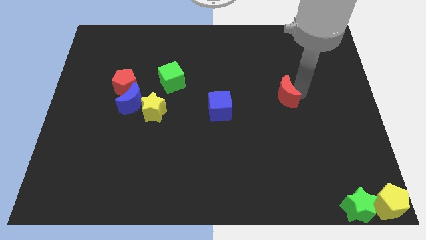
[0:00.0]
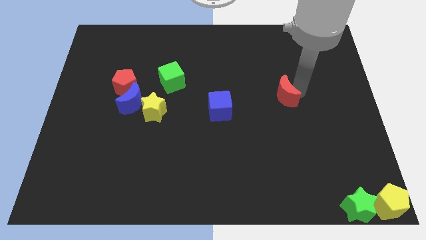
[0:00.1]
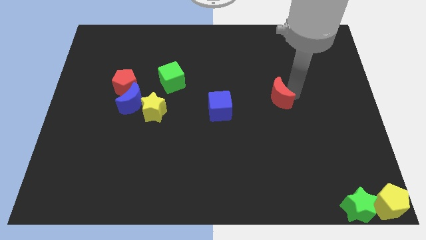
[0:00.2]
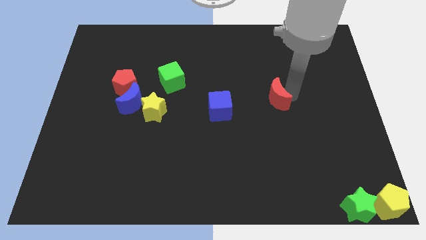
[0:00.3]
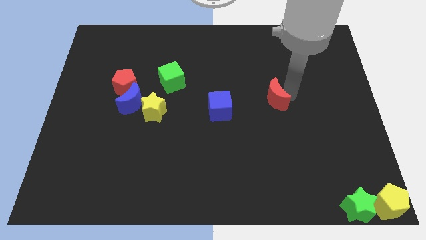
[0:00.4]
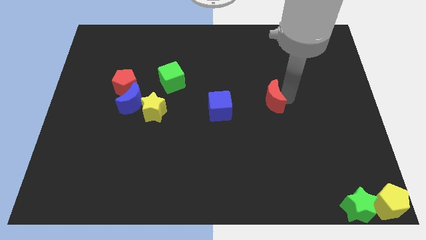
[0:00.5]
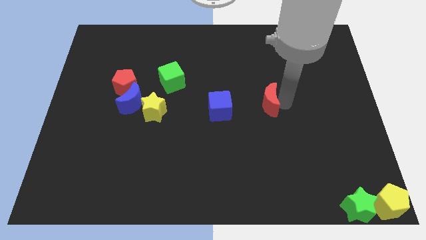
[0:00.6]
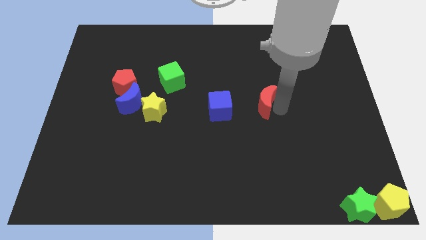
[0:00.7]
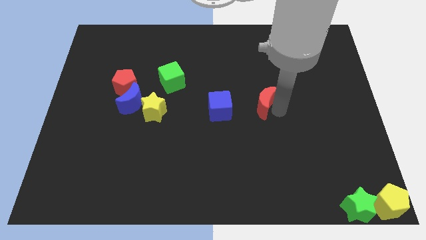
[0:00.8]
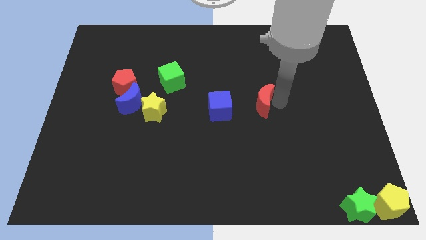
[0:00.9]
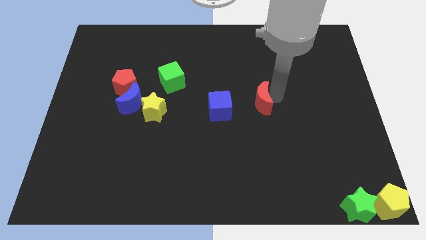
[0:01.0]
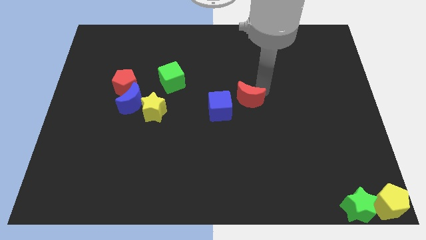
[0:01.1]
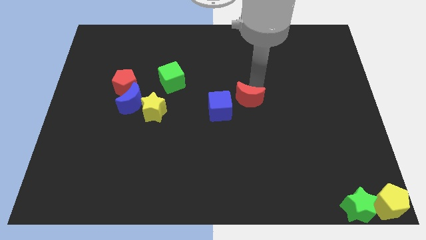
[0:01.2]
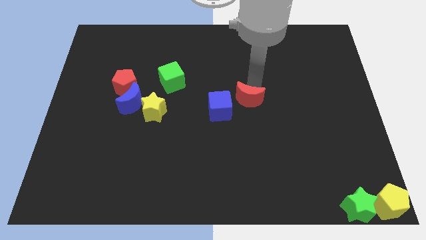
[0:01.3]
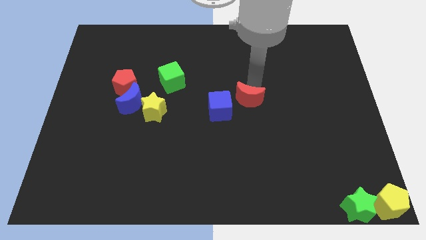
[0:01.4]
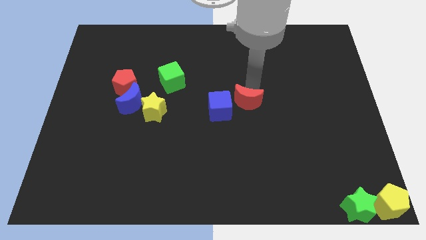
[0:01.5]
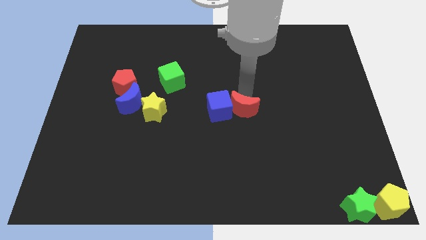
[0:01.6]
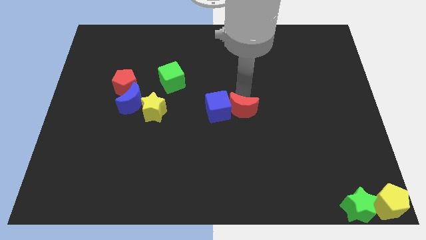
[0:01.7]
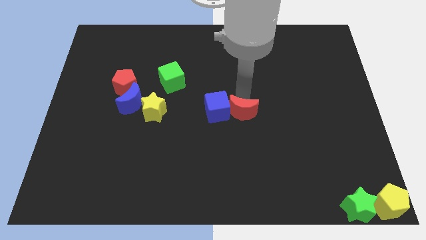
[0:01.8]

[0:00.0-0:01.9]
place red moon to the right of blue cube

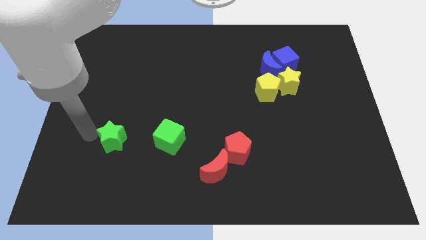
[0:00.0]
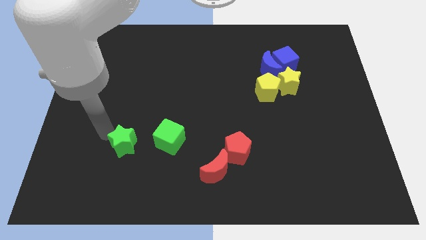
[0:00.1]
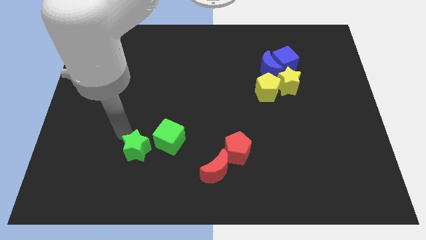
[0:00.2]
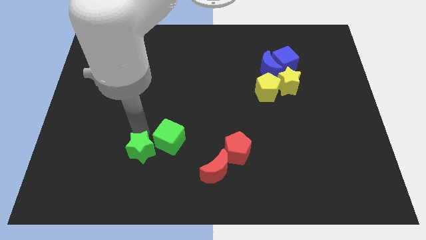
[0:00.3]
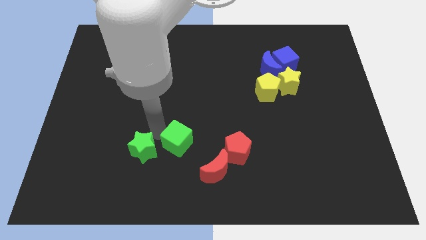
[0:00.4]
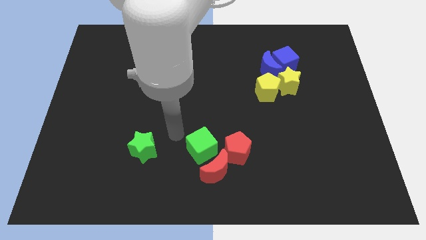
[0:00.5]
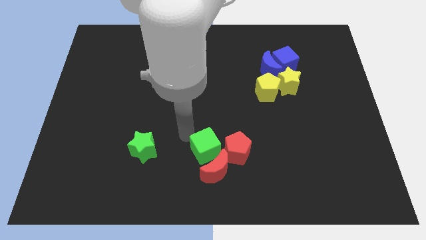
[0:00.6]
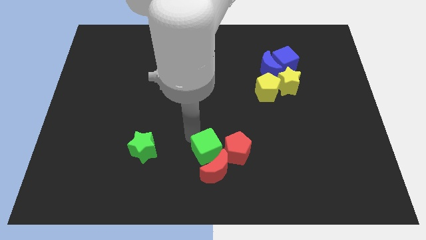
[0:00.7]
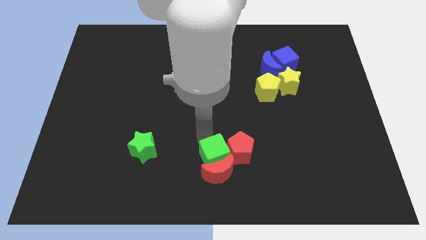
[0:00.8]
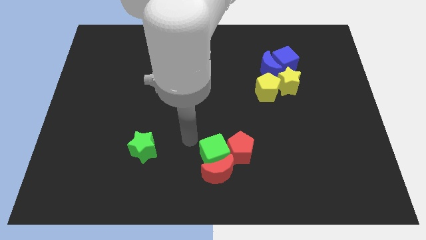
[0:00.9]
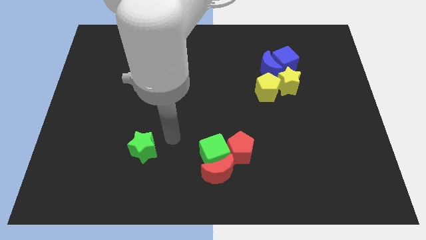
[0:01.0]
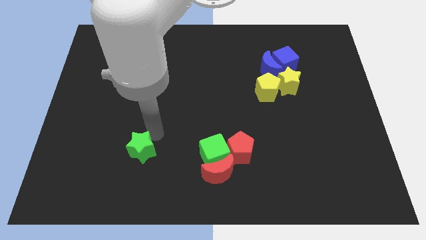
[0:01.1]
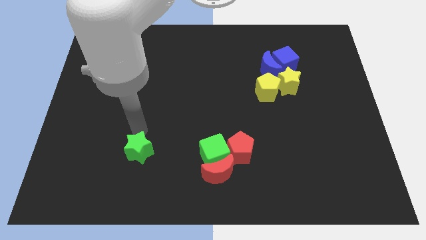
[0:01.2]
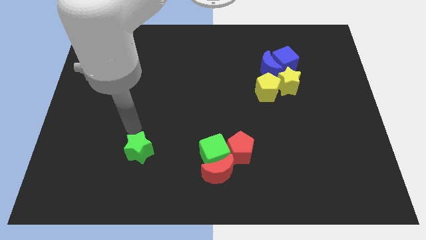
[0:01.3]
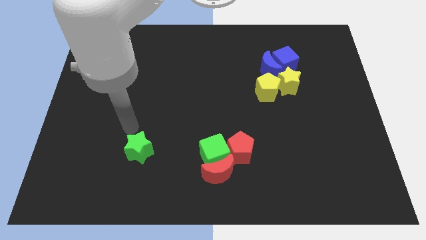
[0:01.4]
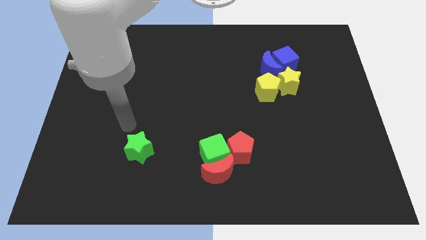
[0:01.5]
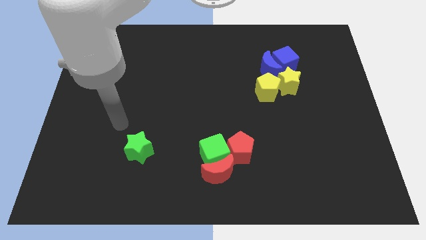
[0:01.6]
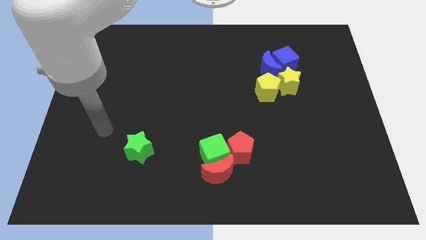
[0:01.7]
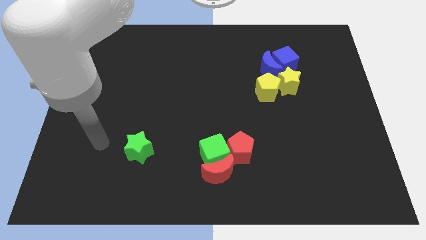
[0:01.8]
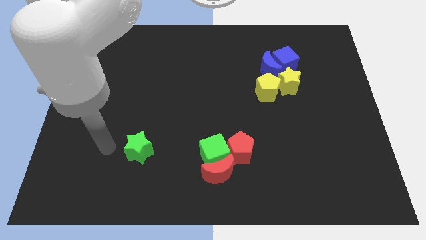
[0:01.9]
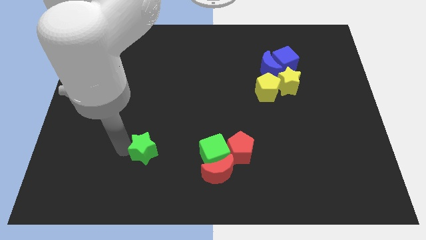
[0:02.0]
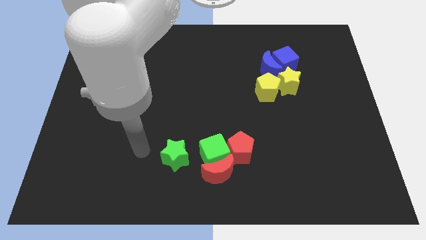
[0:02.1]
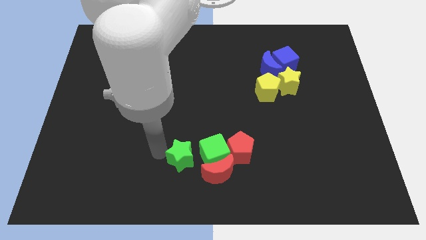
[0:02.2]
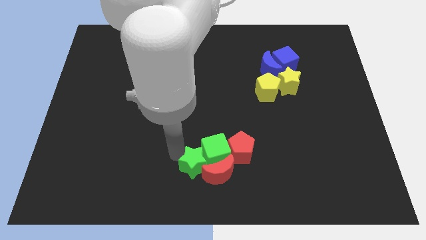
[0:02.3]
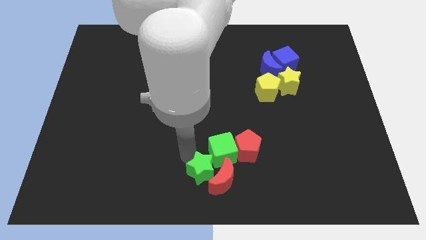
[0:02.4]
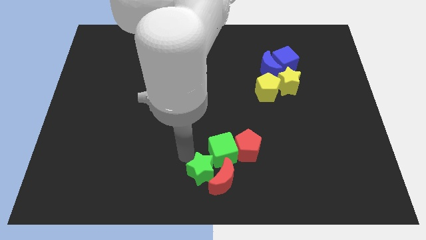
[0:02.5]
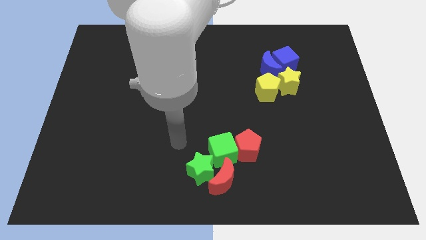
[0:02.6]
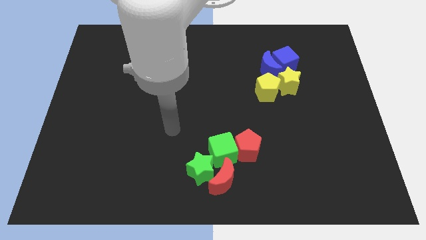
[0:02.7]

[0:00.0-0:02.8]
move the green cube and green star into the red blocks

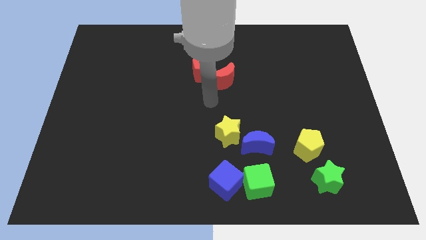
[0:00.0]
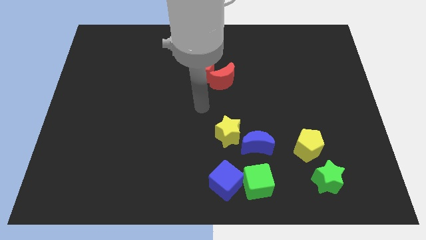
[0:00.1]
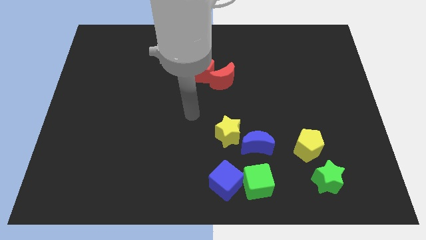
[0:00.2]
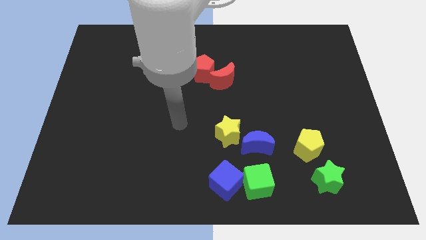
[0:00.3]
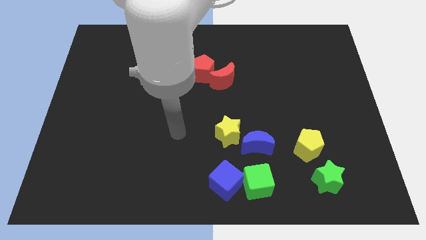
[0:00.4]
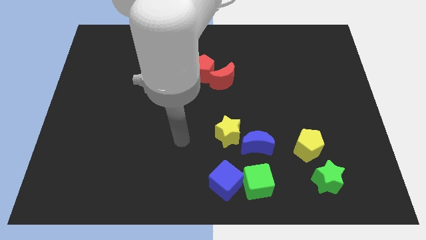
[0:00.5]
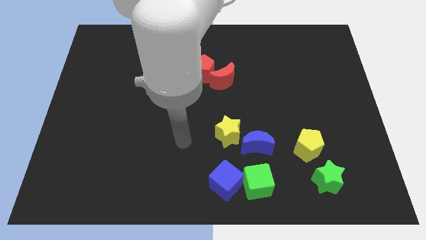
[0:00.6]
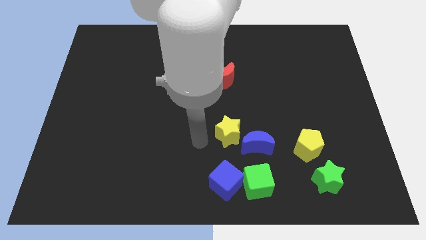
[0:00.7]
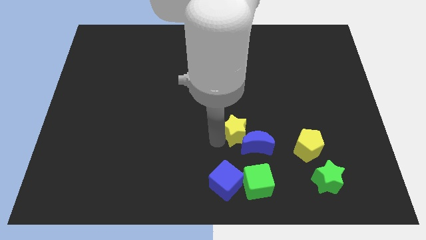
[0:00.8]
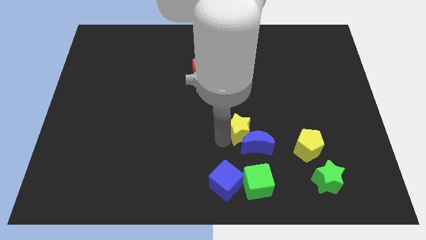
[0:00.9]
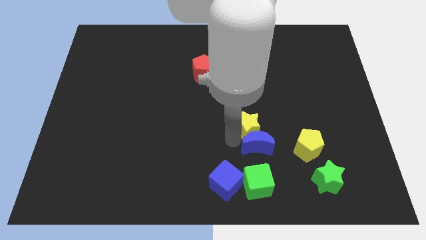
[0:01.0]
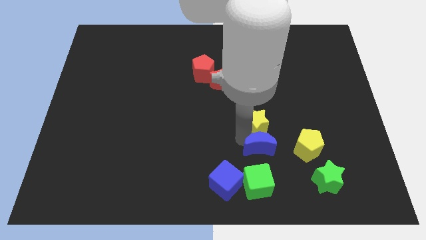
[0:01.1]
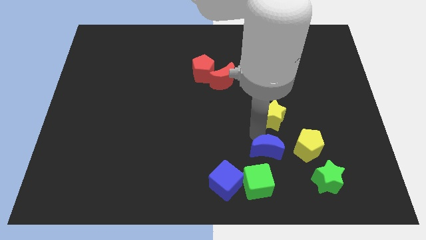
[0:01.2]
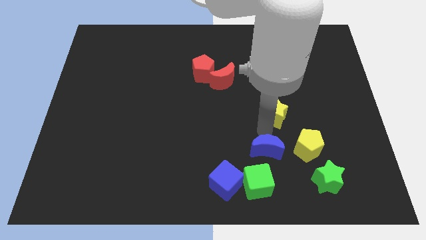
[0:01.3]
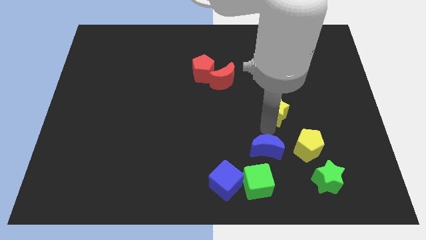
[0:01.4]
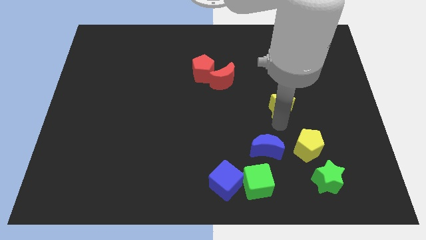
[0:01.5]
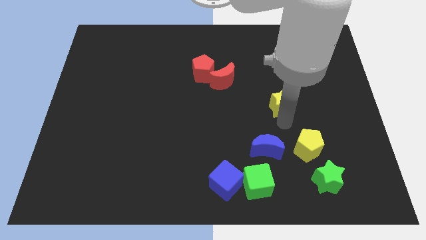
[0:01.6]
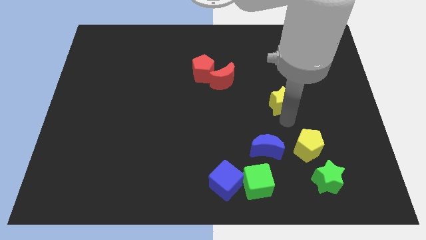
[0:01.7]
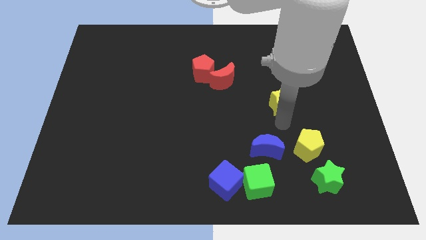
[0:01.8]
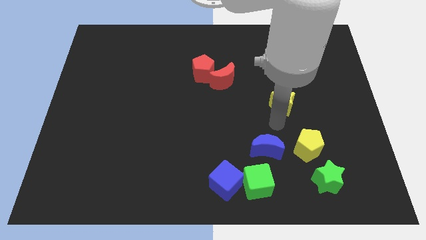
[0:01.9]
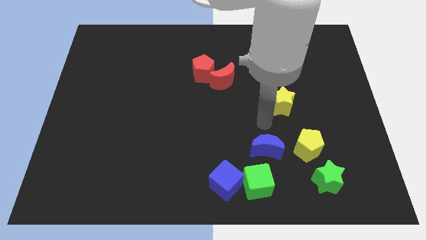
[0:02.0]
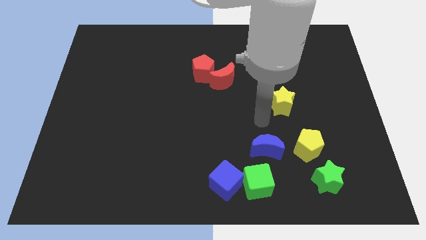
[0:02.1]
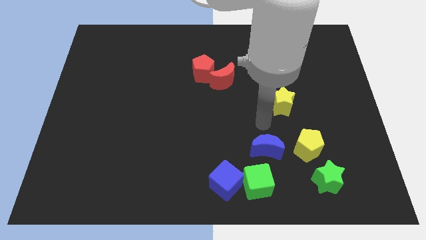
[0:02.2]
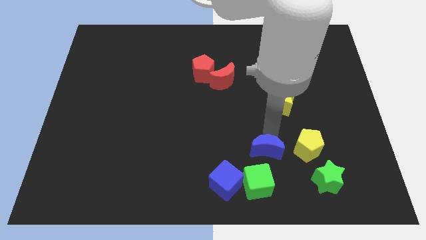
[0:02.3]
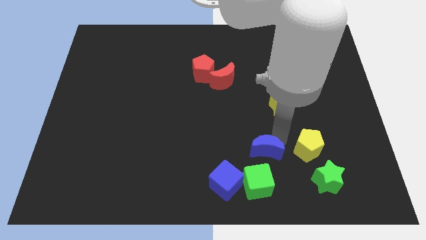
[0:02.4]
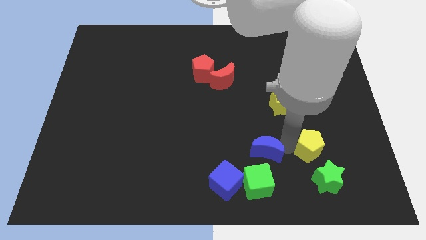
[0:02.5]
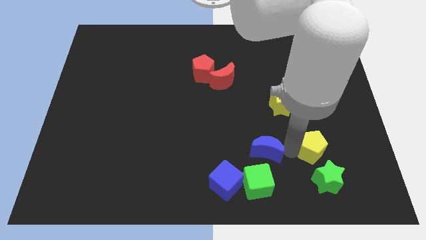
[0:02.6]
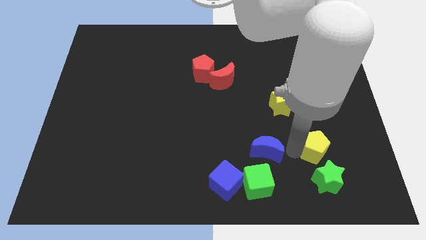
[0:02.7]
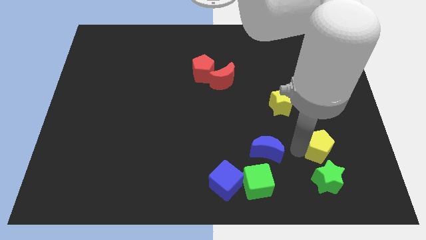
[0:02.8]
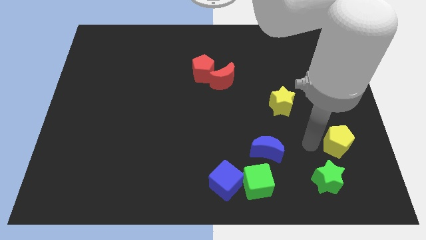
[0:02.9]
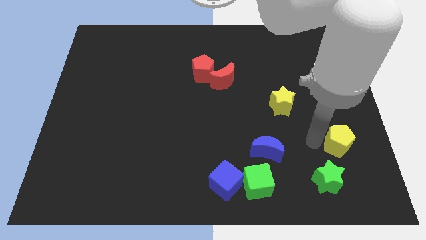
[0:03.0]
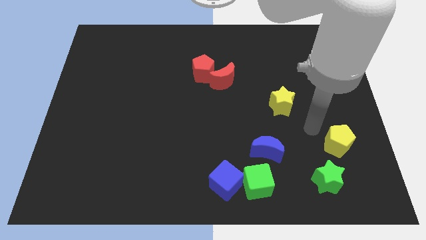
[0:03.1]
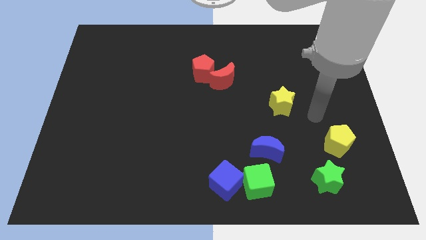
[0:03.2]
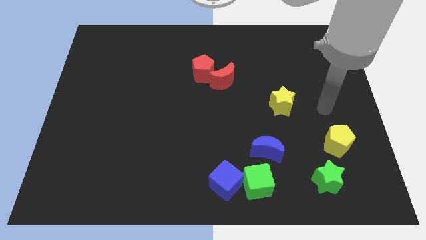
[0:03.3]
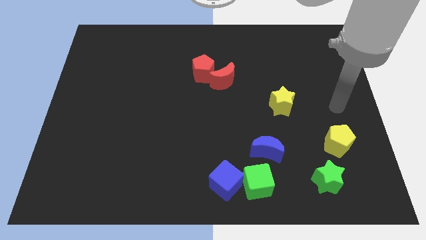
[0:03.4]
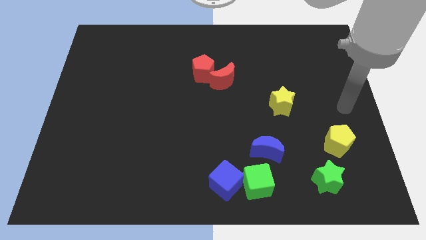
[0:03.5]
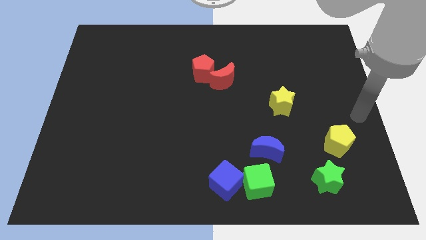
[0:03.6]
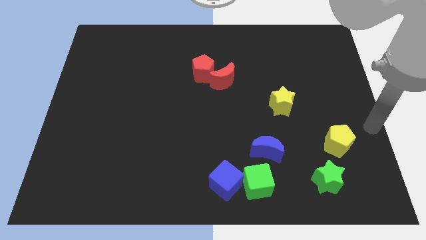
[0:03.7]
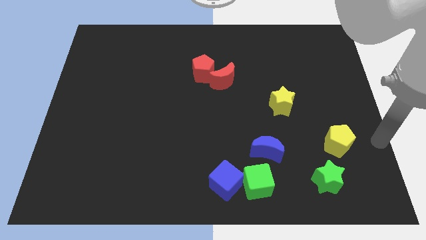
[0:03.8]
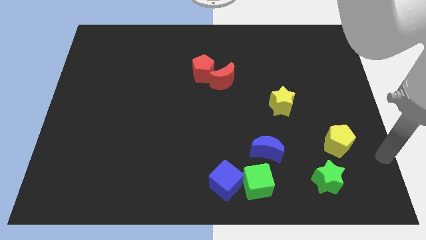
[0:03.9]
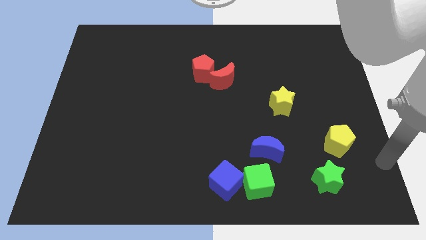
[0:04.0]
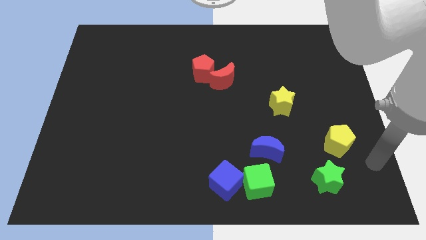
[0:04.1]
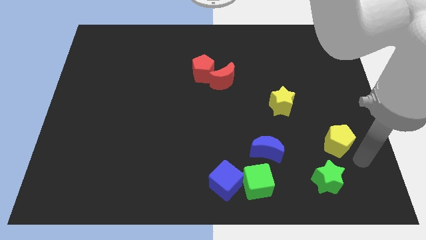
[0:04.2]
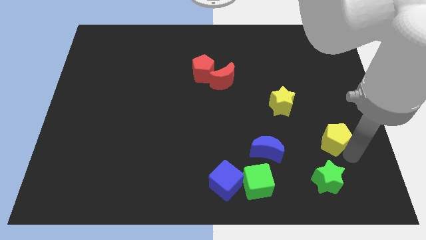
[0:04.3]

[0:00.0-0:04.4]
slide the yellow star in between the yellow pentagon and red moon
